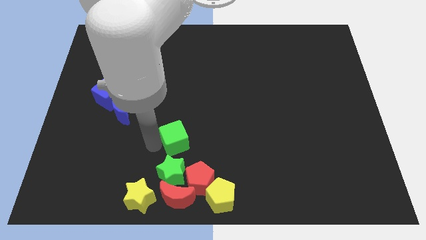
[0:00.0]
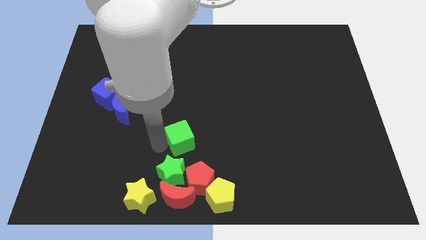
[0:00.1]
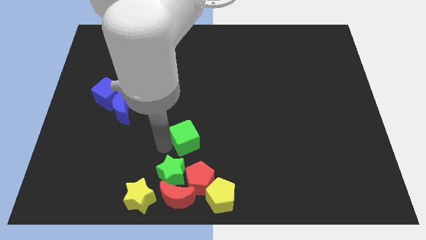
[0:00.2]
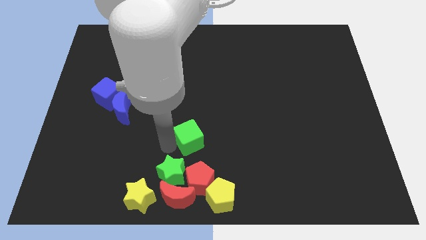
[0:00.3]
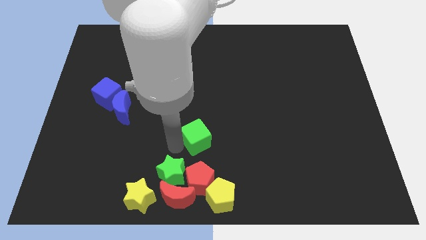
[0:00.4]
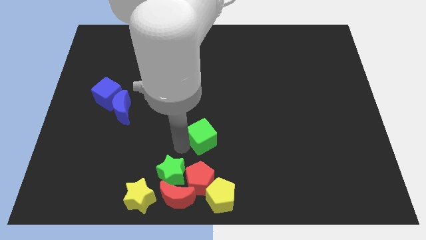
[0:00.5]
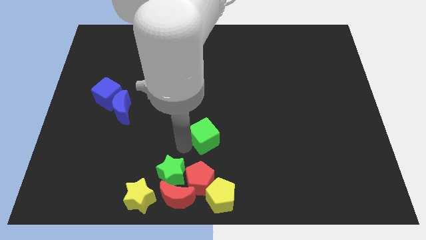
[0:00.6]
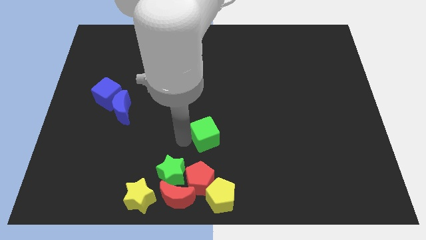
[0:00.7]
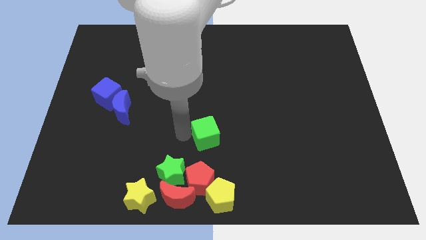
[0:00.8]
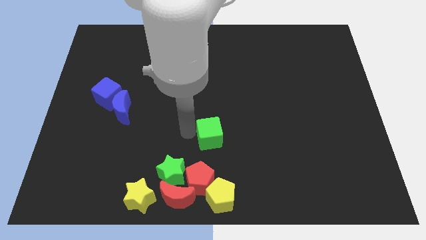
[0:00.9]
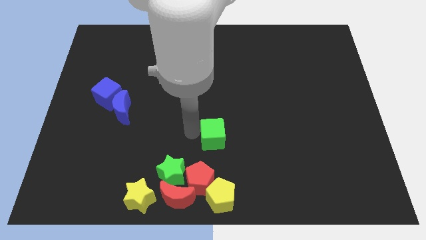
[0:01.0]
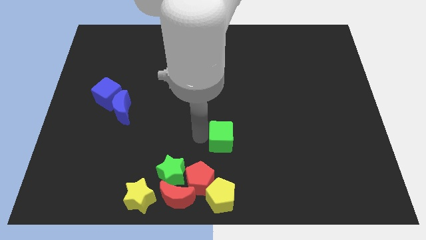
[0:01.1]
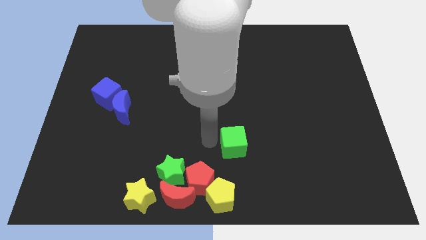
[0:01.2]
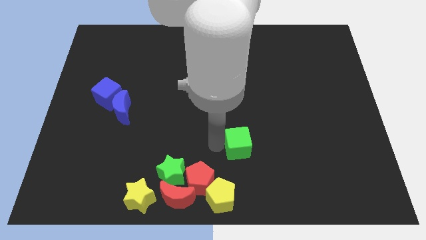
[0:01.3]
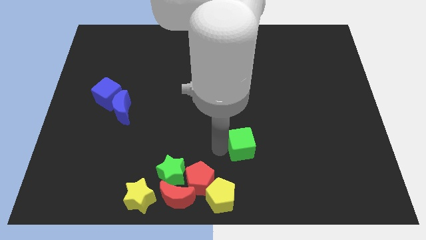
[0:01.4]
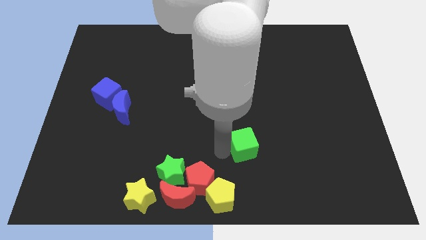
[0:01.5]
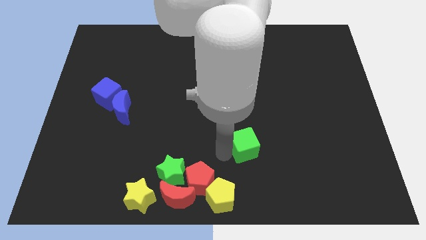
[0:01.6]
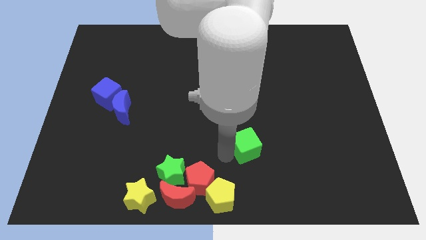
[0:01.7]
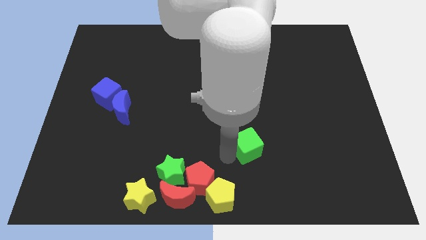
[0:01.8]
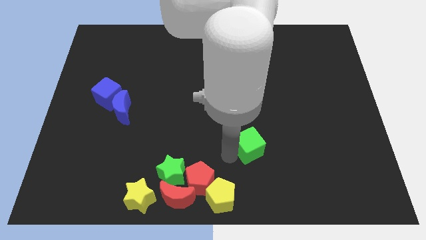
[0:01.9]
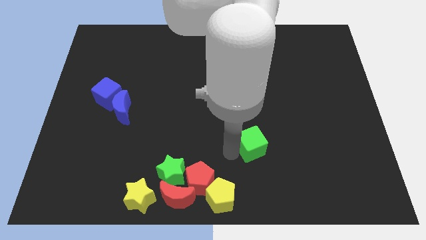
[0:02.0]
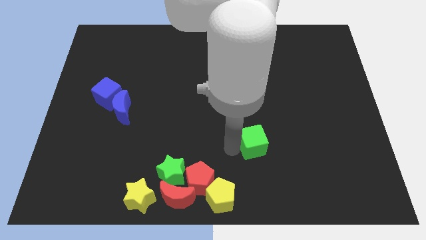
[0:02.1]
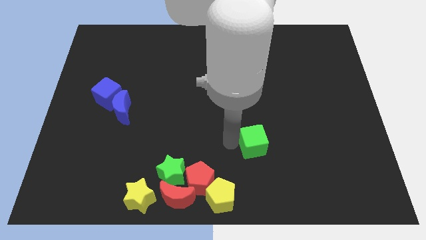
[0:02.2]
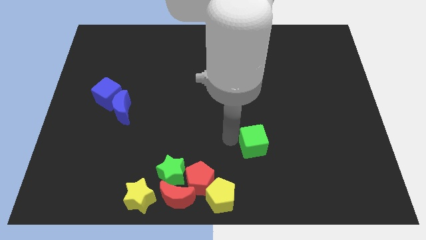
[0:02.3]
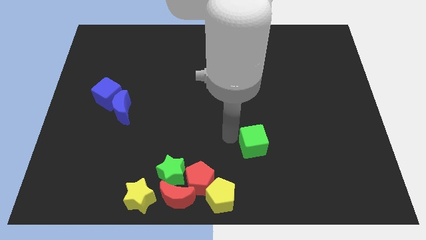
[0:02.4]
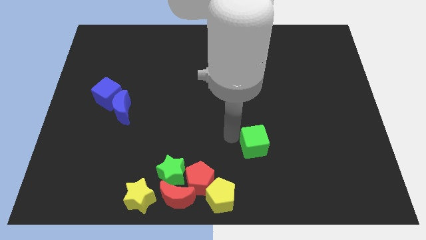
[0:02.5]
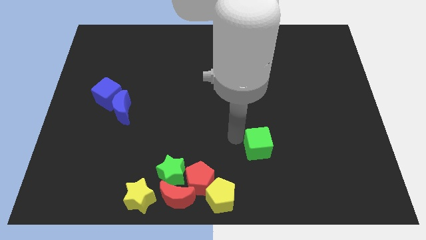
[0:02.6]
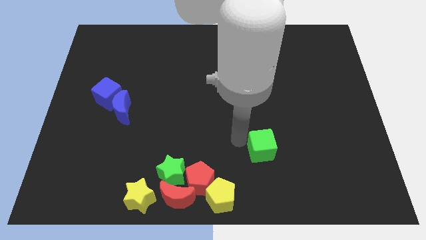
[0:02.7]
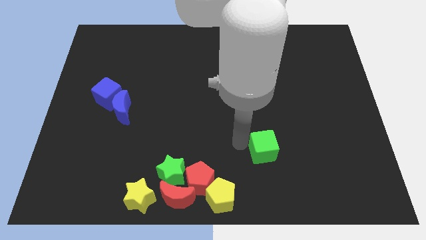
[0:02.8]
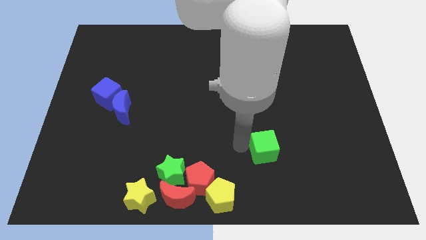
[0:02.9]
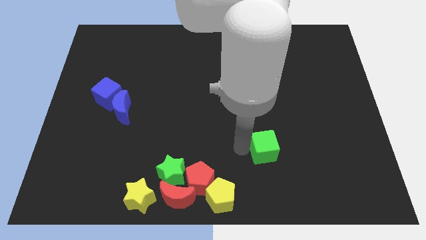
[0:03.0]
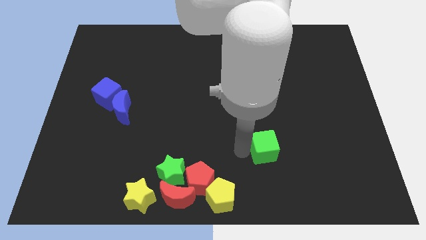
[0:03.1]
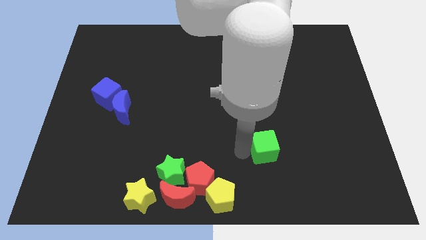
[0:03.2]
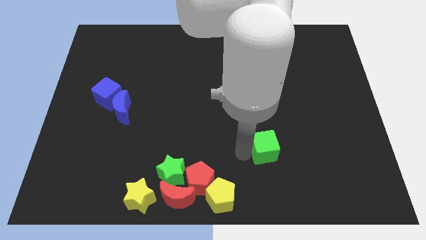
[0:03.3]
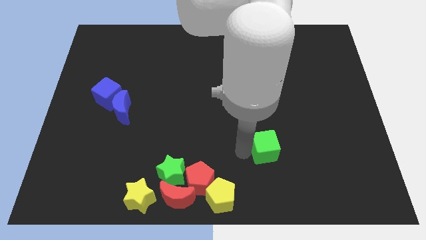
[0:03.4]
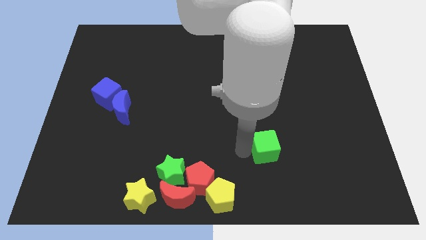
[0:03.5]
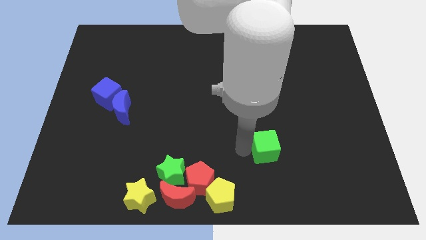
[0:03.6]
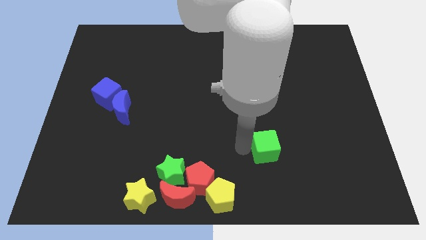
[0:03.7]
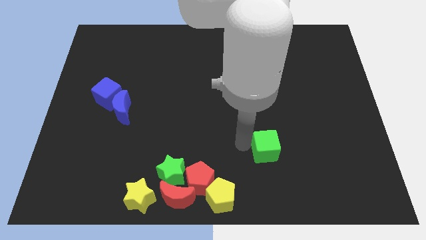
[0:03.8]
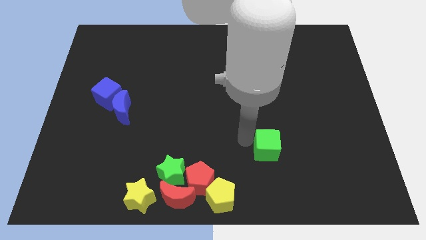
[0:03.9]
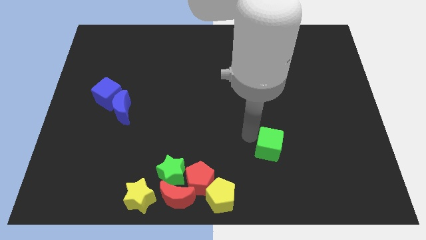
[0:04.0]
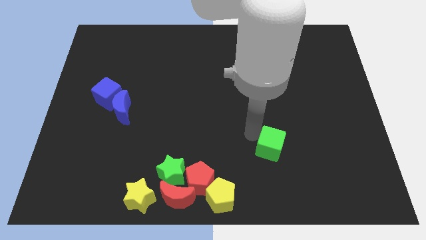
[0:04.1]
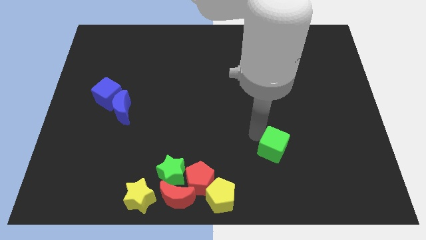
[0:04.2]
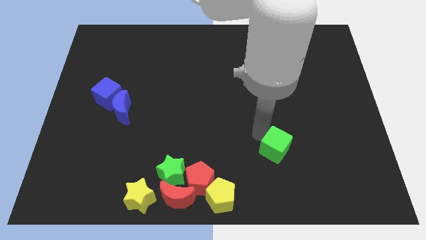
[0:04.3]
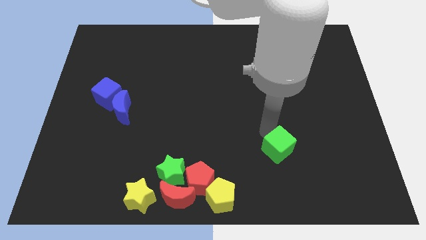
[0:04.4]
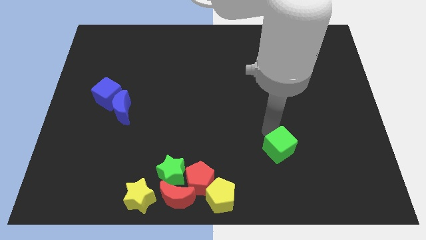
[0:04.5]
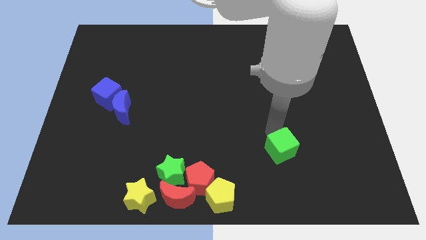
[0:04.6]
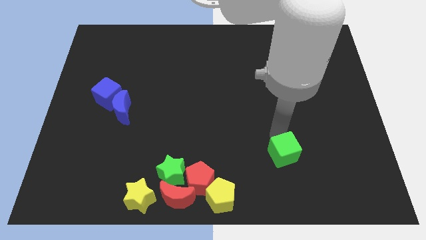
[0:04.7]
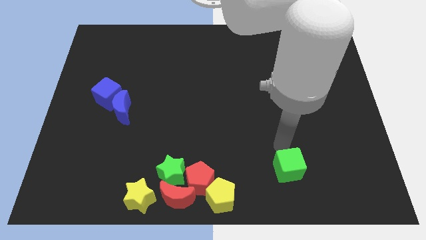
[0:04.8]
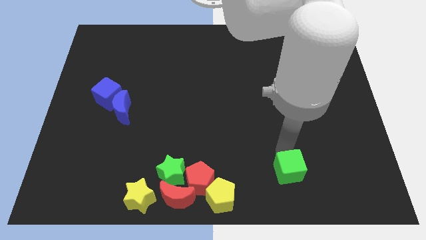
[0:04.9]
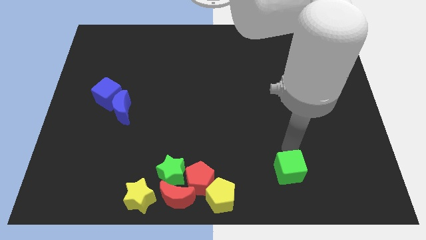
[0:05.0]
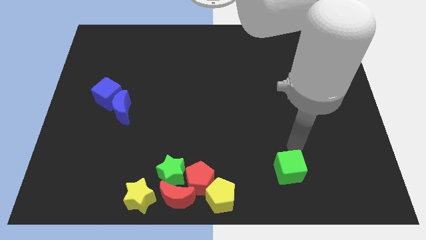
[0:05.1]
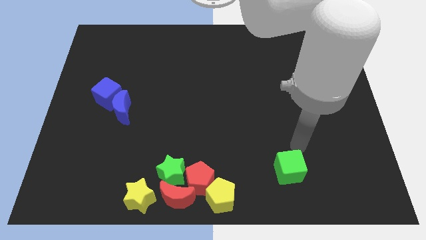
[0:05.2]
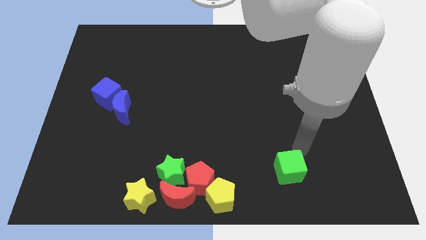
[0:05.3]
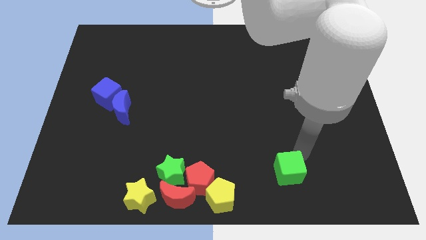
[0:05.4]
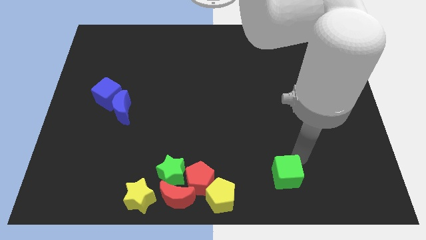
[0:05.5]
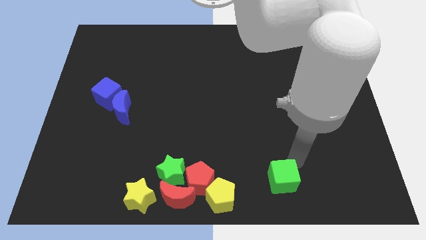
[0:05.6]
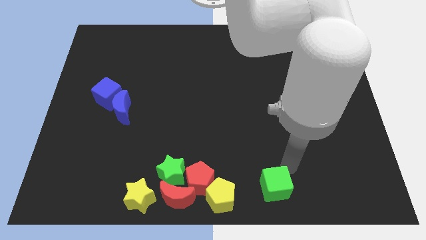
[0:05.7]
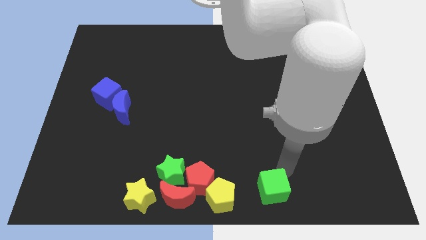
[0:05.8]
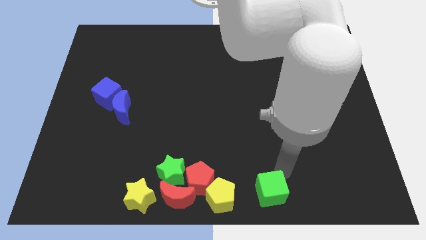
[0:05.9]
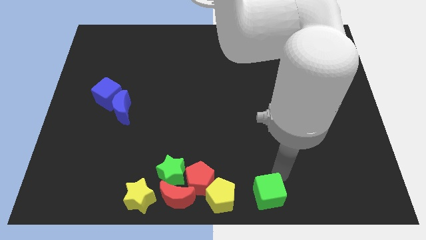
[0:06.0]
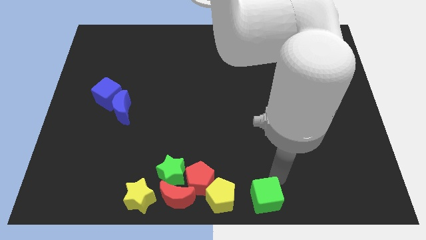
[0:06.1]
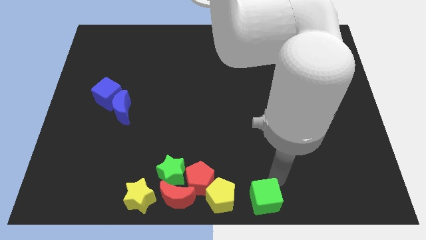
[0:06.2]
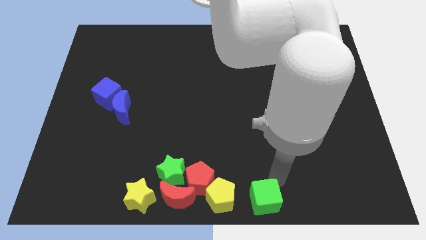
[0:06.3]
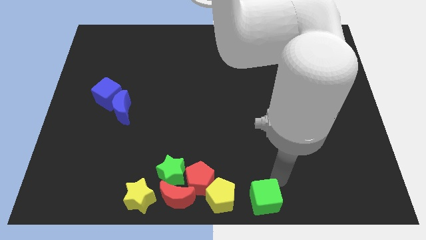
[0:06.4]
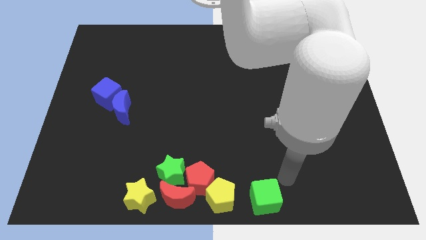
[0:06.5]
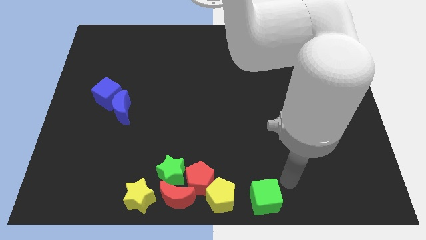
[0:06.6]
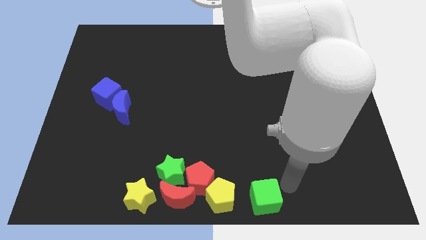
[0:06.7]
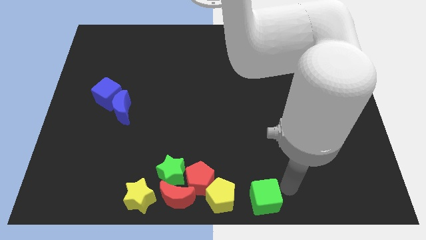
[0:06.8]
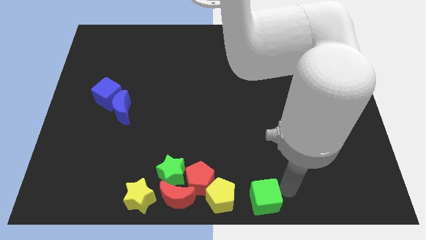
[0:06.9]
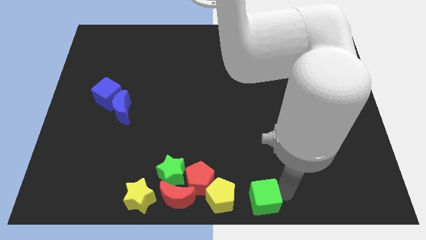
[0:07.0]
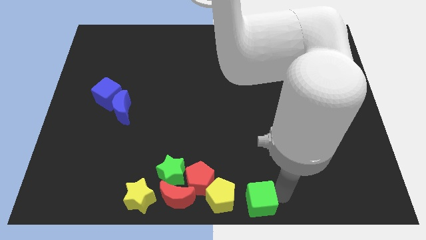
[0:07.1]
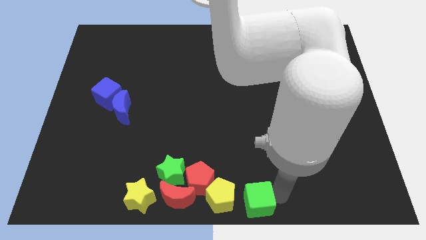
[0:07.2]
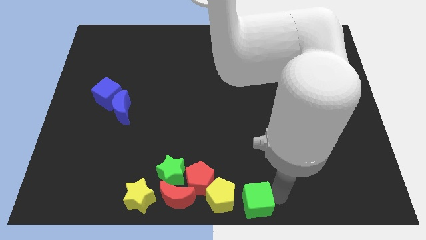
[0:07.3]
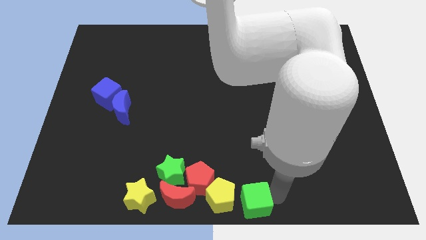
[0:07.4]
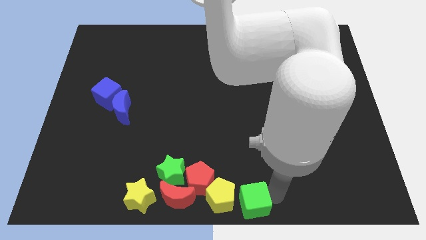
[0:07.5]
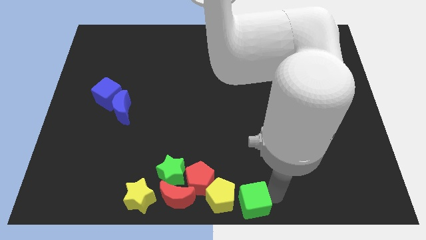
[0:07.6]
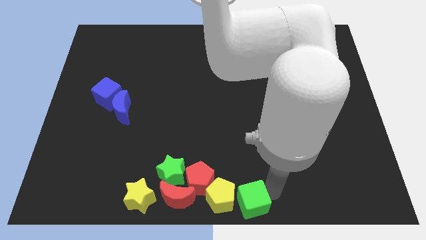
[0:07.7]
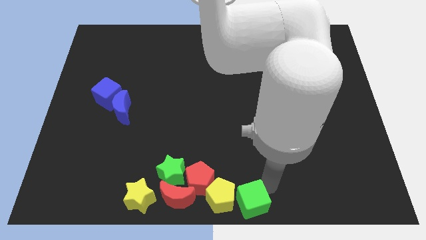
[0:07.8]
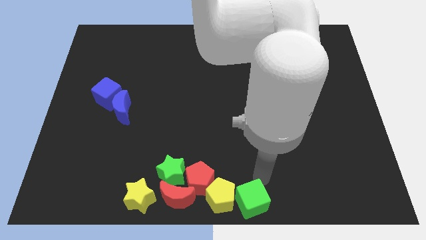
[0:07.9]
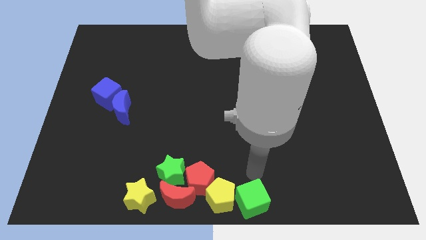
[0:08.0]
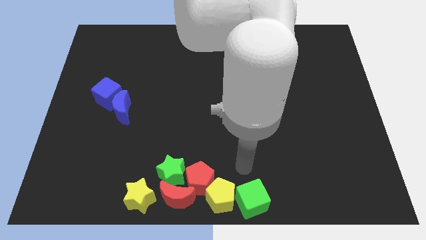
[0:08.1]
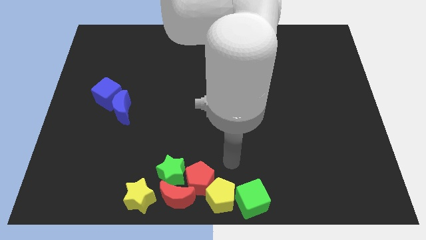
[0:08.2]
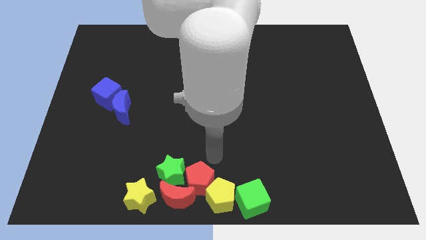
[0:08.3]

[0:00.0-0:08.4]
move the green cube to the right side of the yellow pentagon

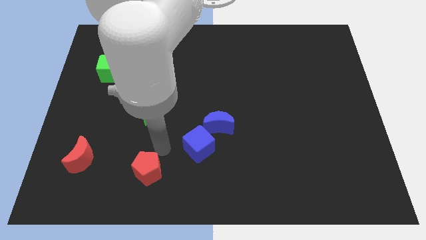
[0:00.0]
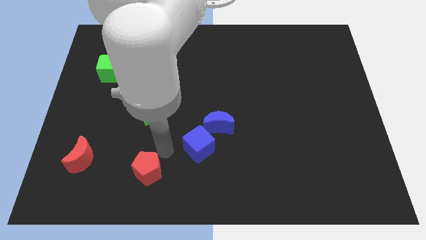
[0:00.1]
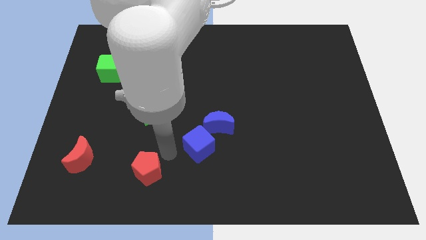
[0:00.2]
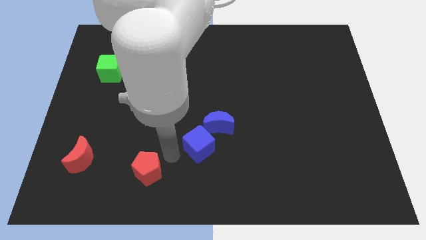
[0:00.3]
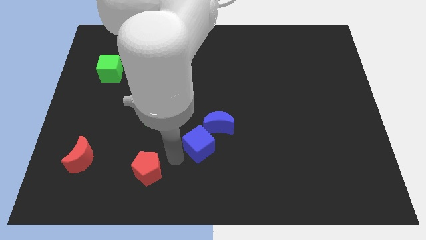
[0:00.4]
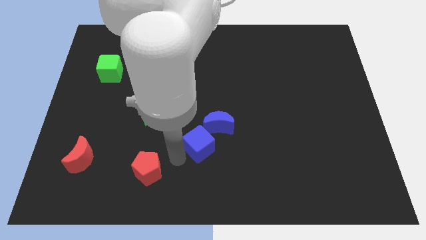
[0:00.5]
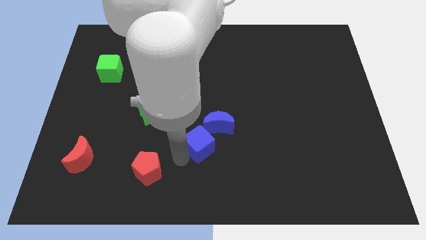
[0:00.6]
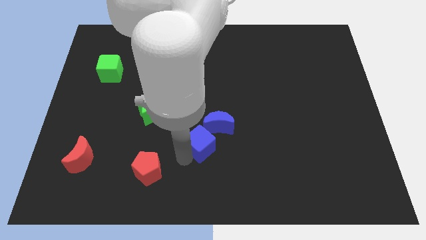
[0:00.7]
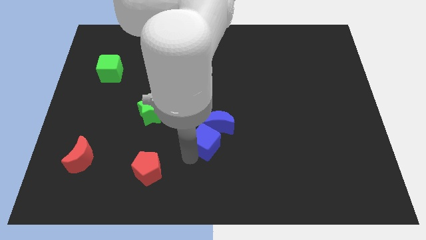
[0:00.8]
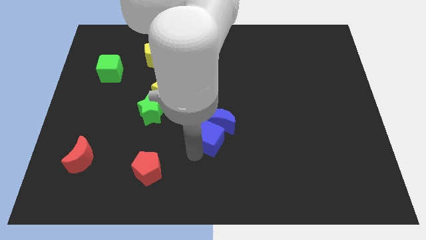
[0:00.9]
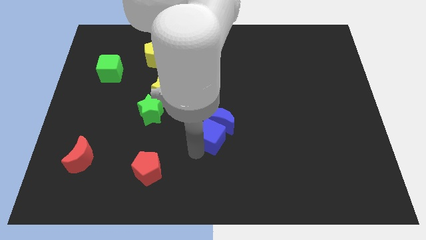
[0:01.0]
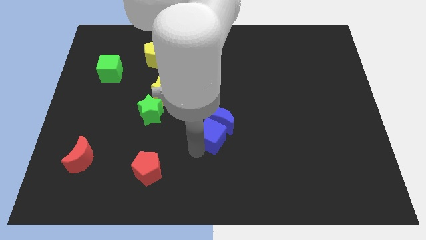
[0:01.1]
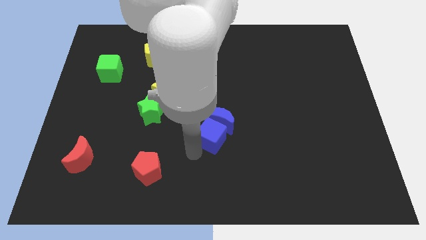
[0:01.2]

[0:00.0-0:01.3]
slide the blue cube into the bottom side of the blue crescent
